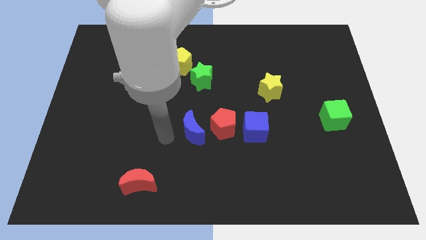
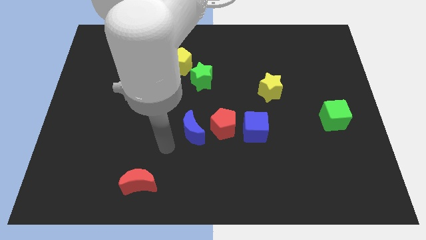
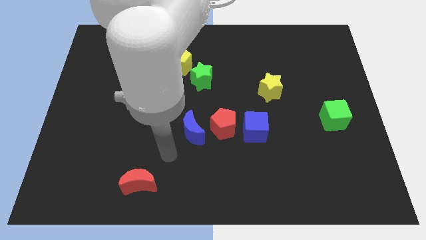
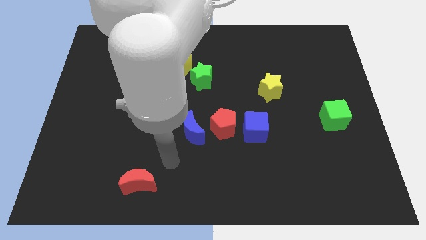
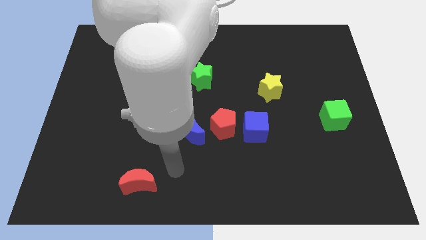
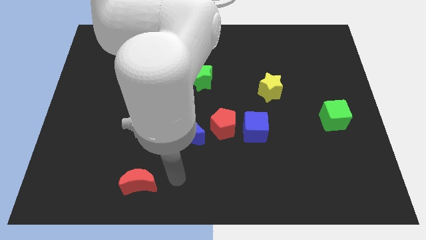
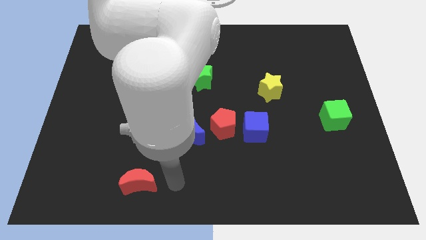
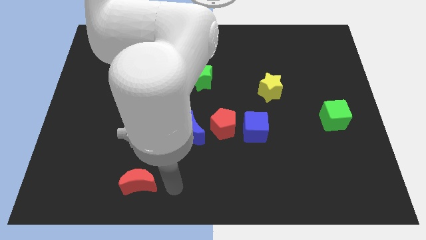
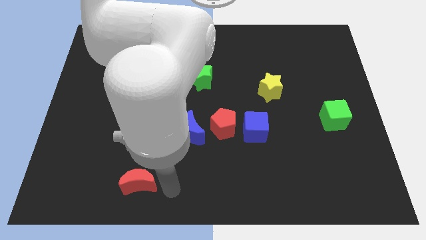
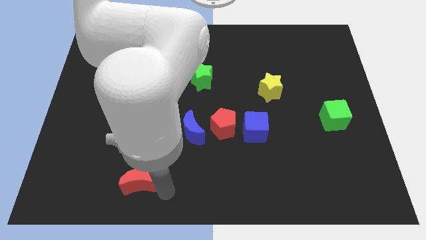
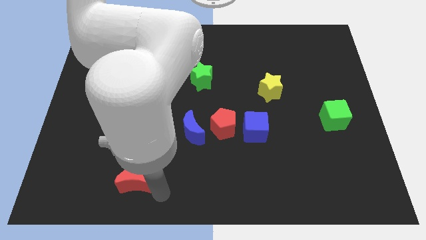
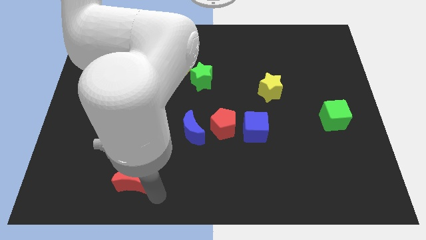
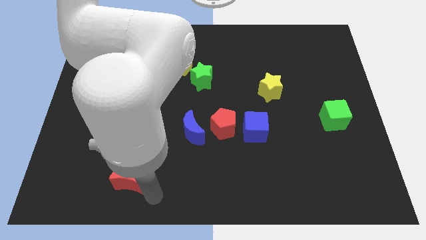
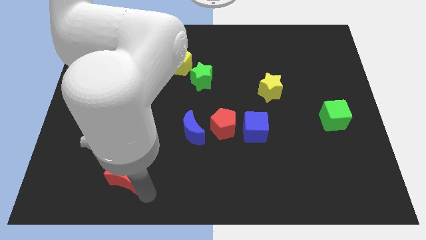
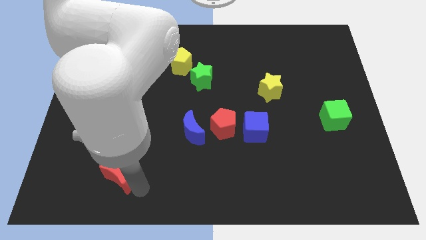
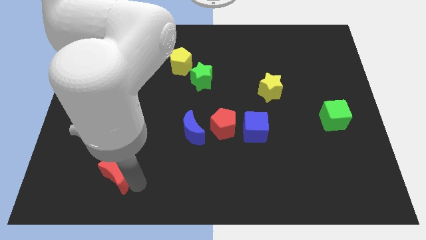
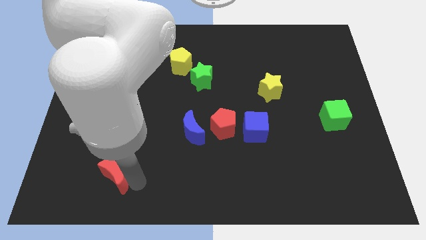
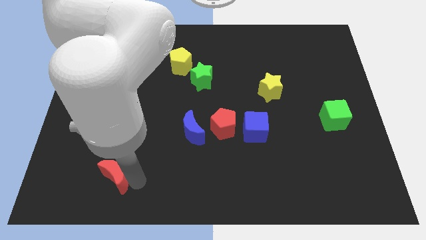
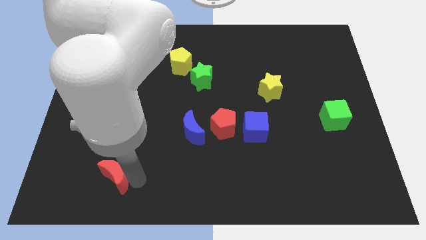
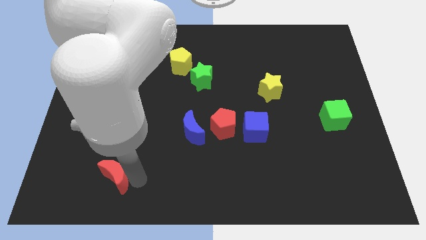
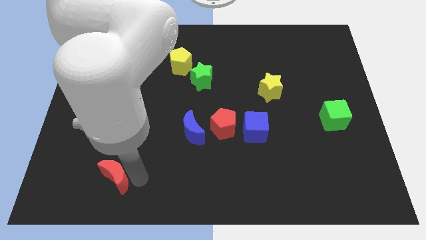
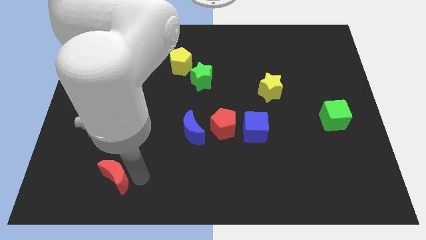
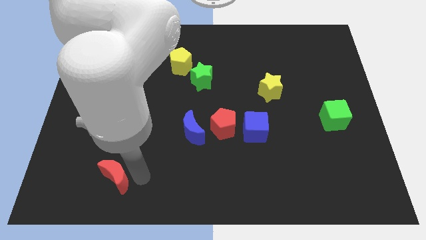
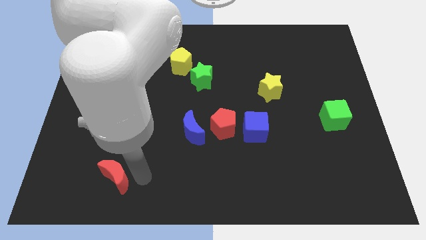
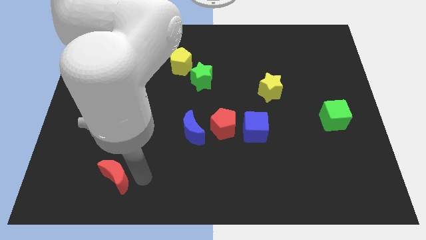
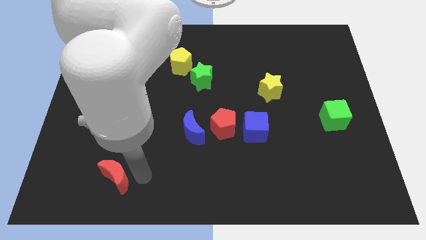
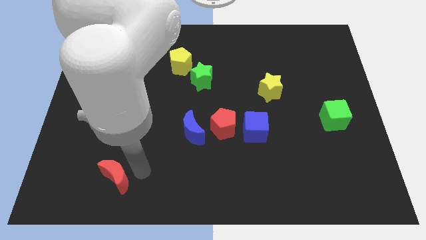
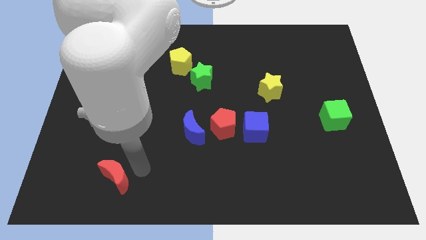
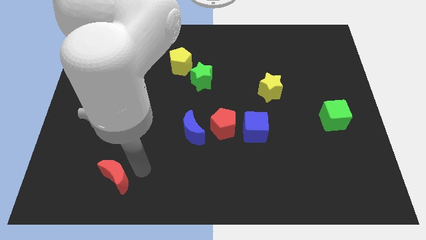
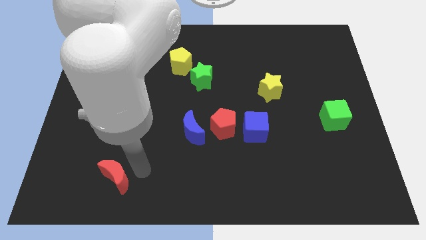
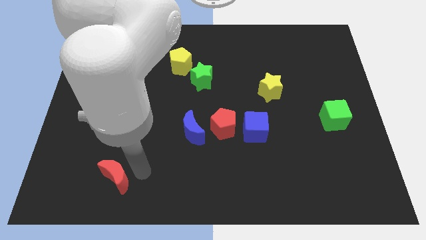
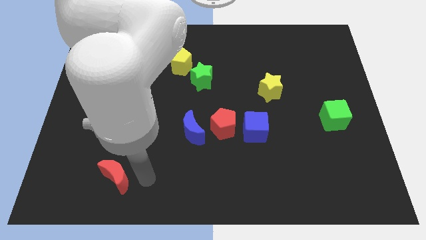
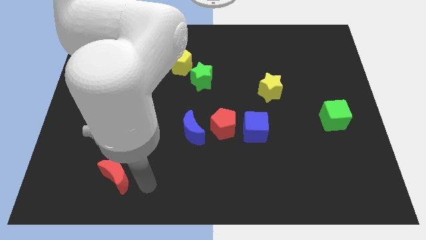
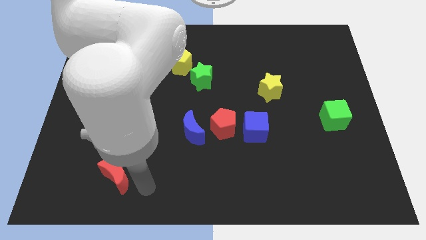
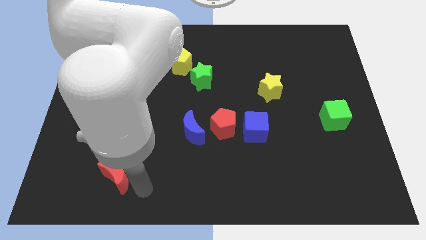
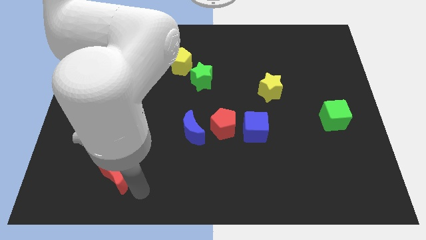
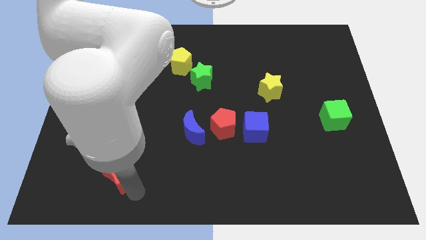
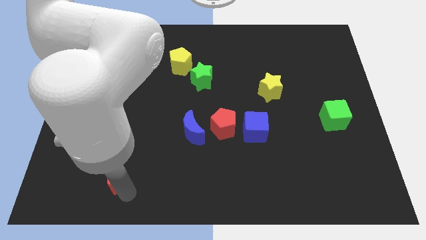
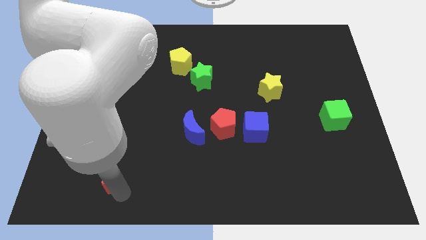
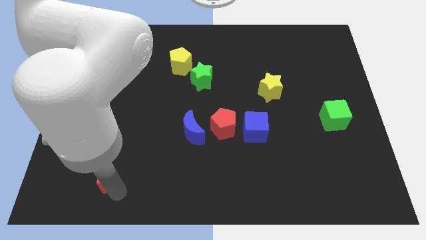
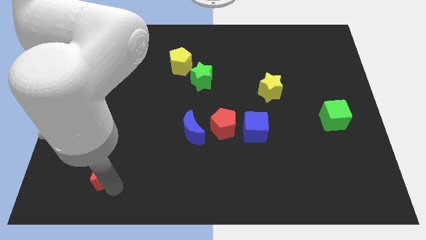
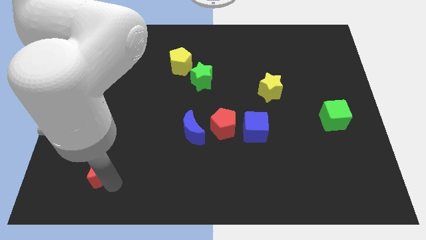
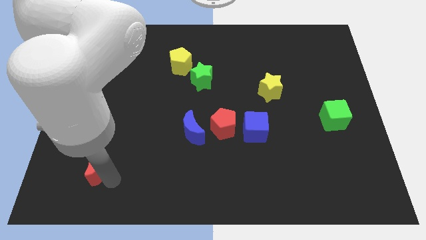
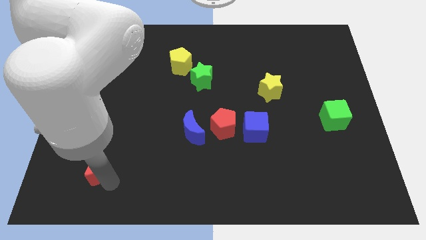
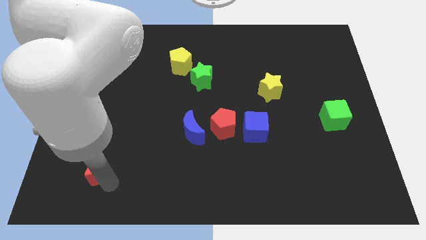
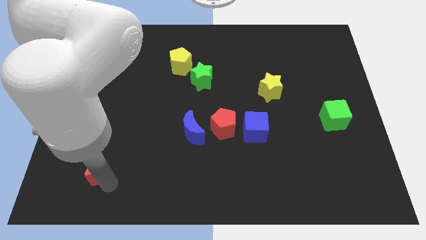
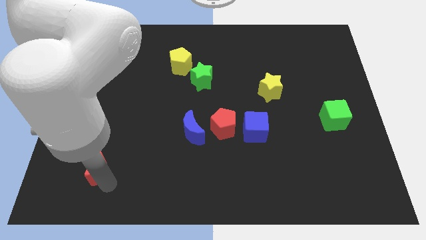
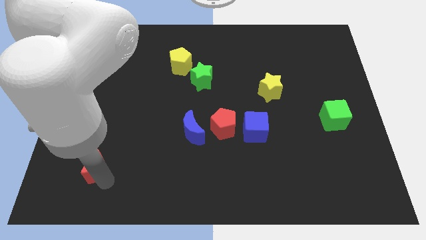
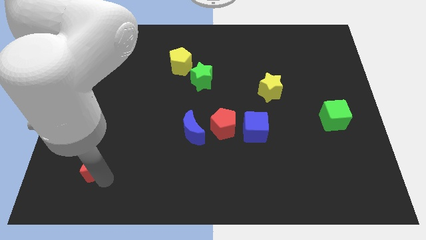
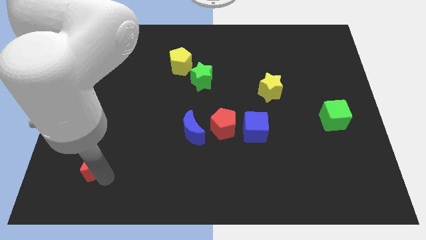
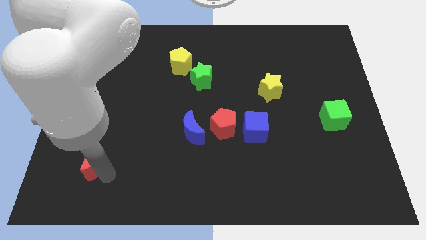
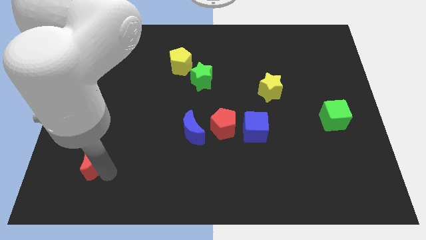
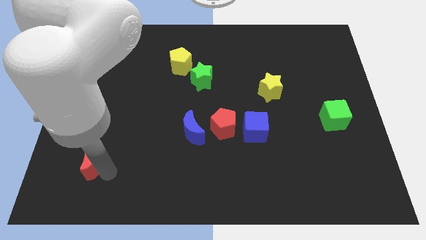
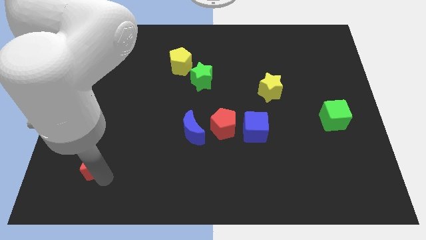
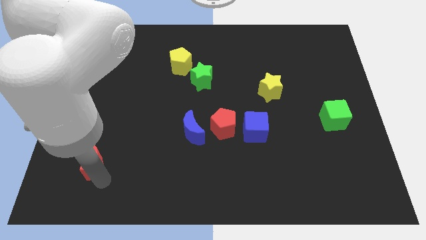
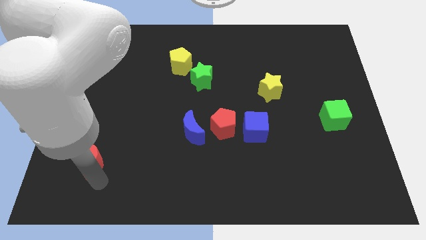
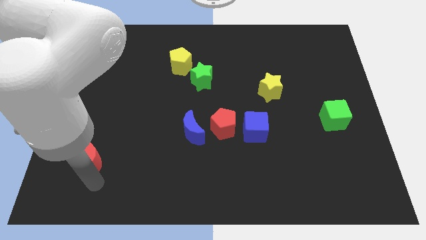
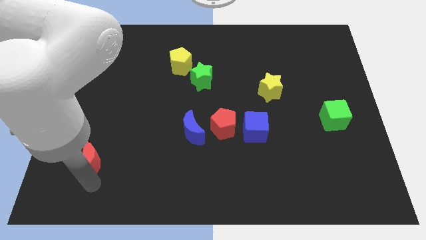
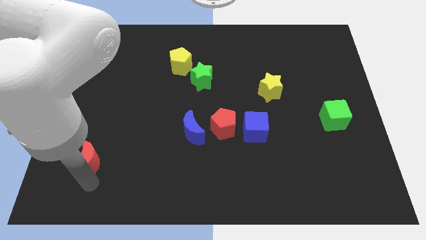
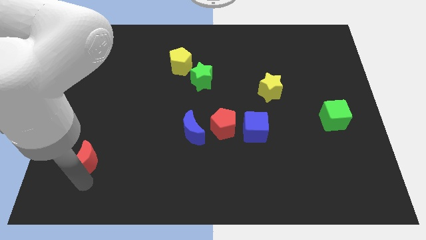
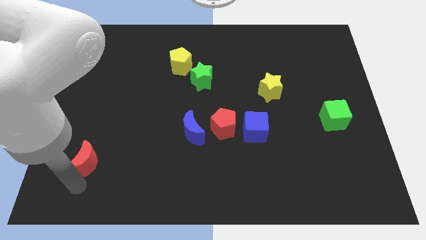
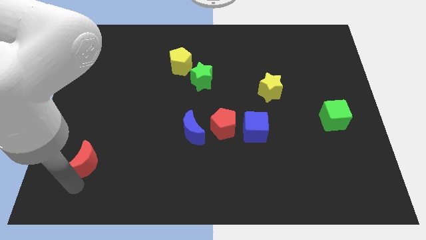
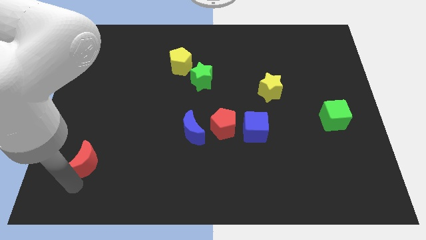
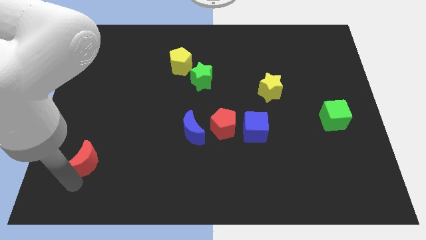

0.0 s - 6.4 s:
push the red moon to the left side of the board

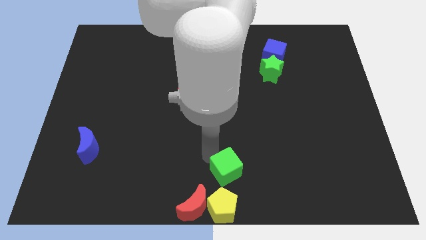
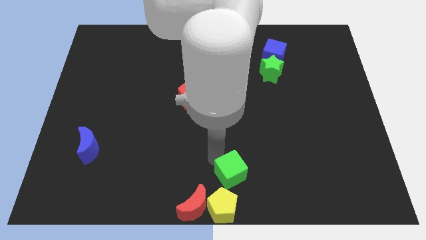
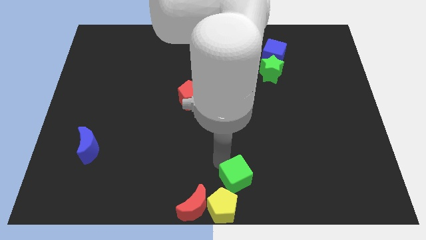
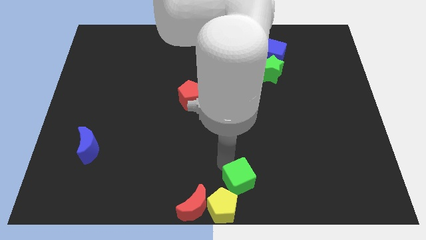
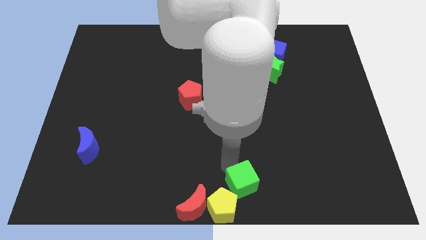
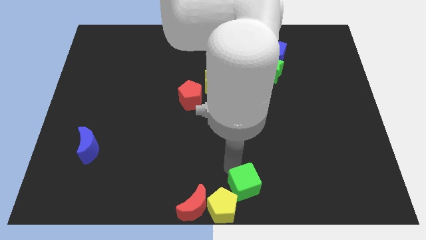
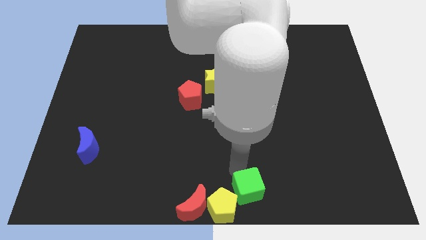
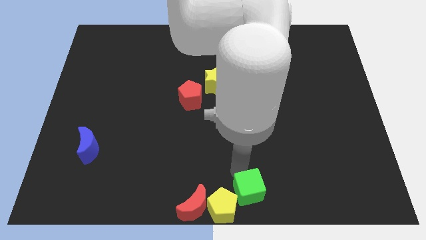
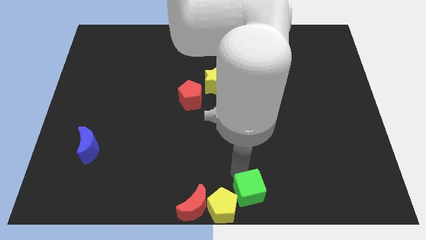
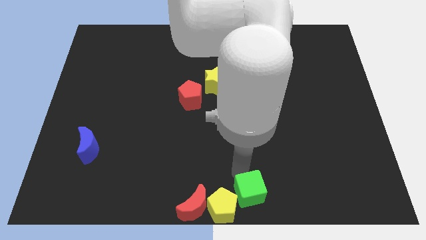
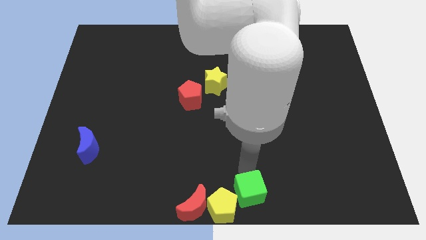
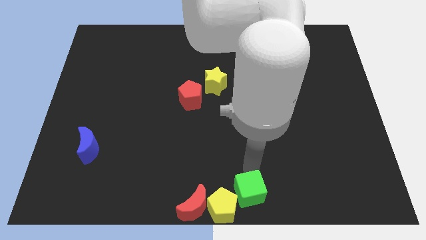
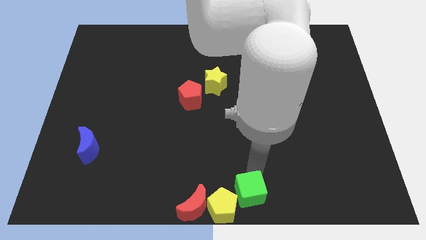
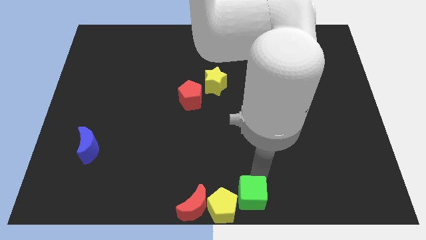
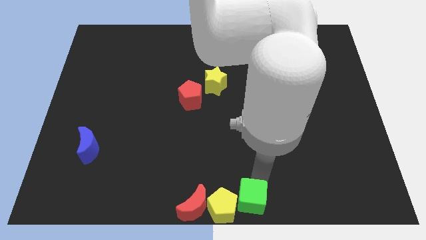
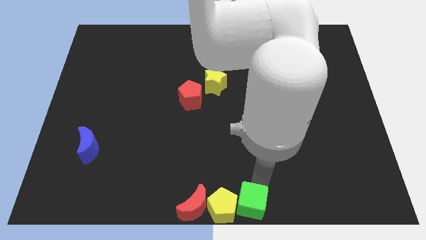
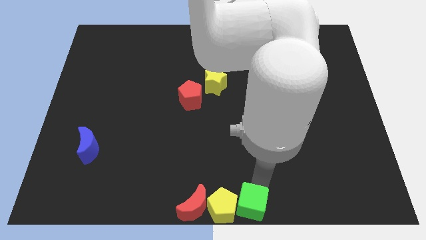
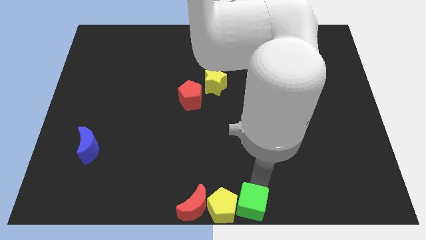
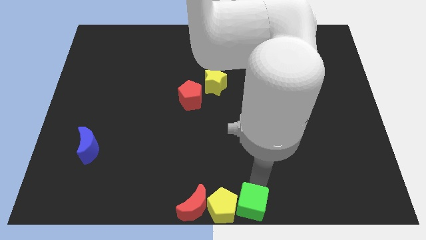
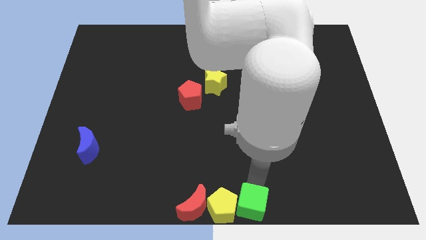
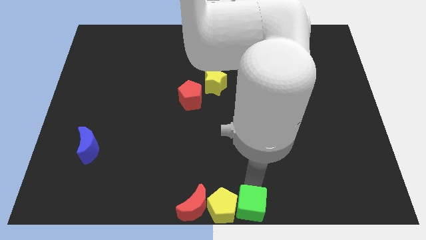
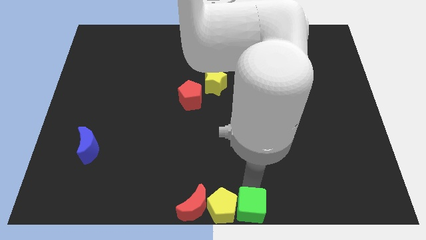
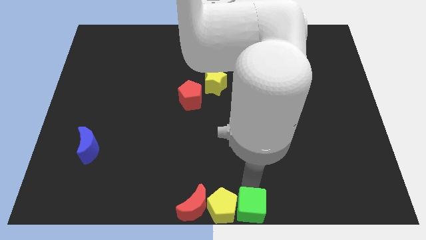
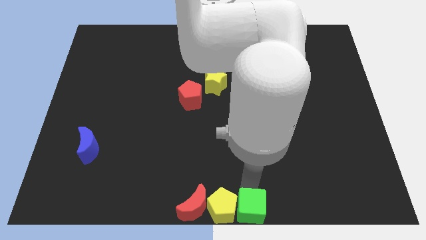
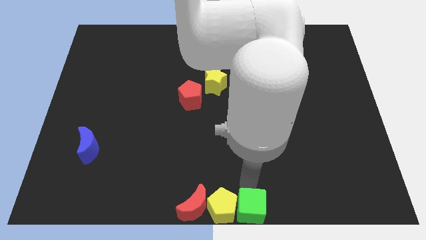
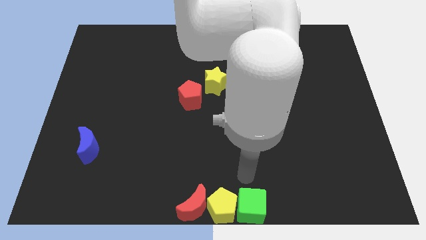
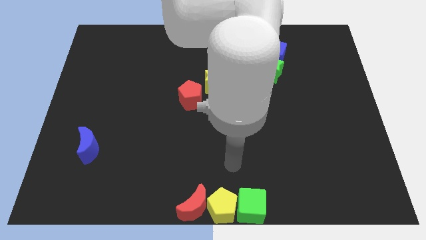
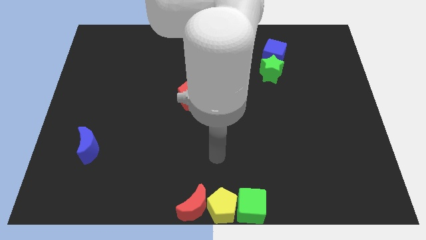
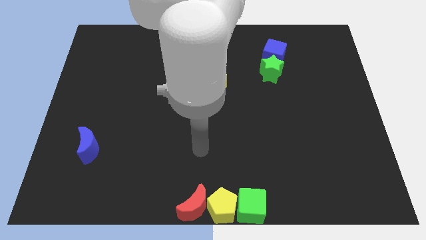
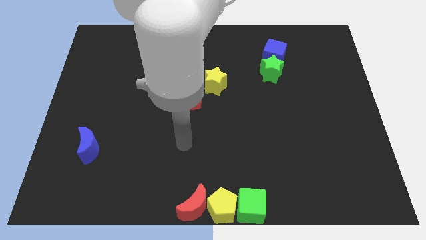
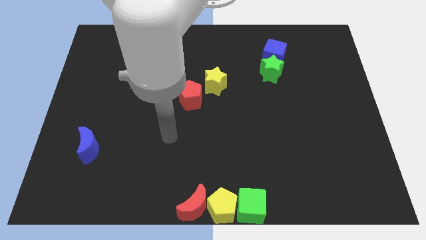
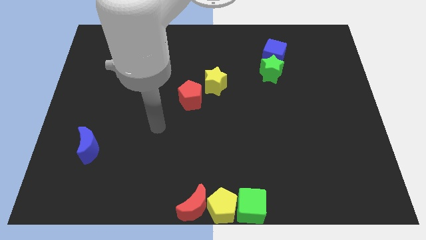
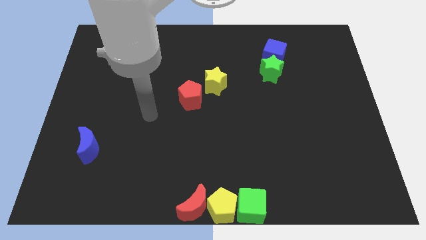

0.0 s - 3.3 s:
put green cube to bottom center
